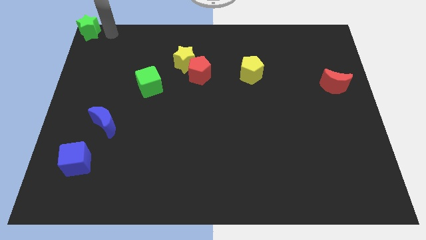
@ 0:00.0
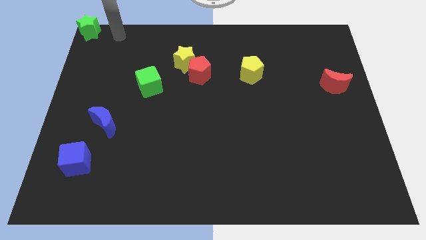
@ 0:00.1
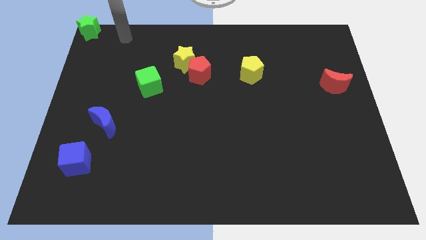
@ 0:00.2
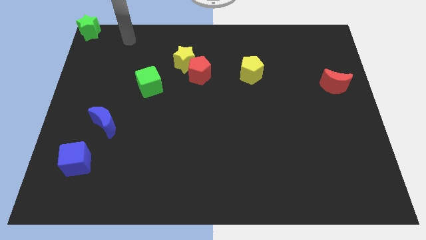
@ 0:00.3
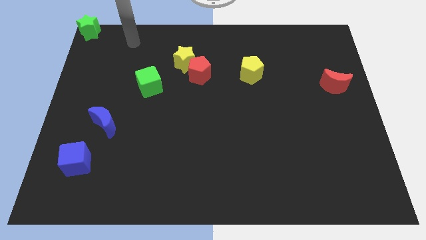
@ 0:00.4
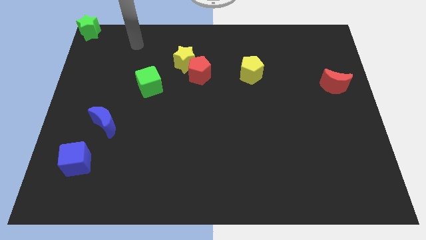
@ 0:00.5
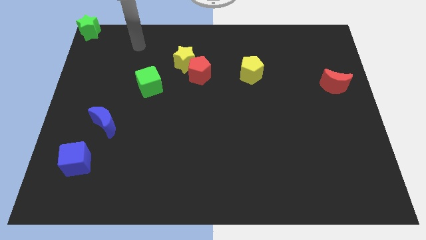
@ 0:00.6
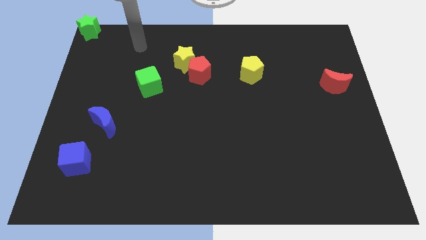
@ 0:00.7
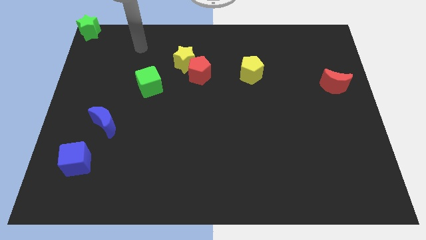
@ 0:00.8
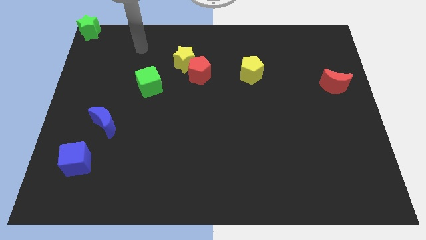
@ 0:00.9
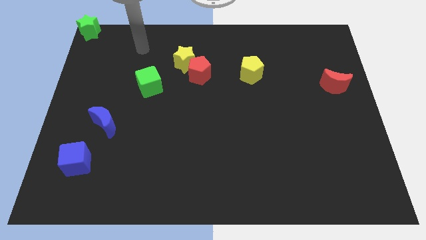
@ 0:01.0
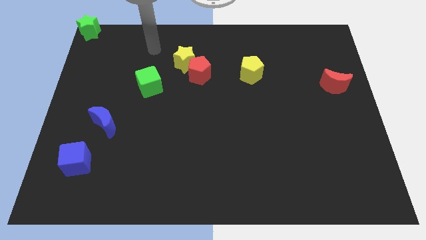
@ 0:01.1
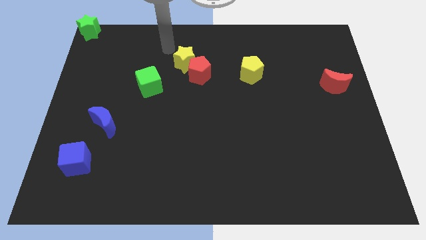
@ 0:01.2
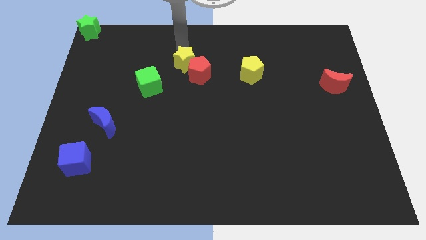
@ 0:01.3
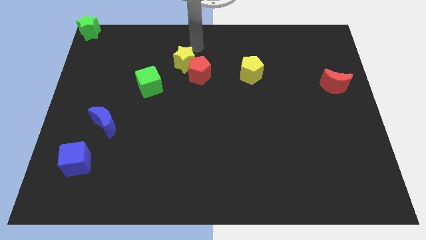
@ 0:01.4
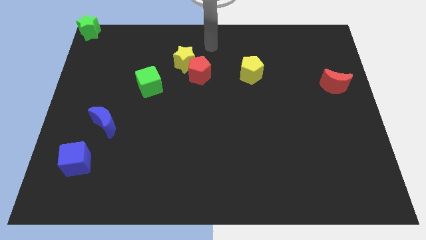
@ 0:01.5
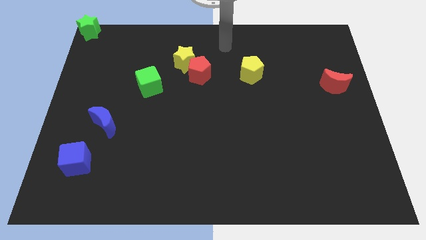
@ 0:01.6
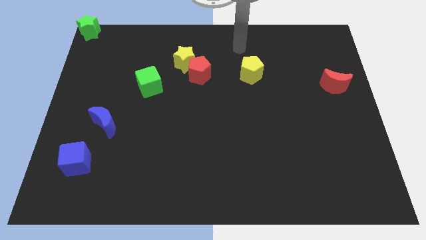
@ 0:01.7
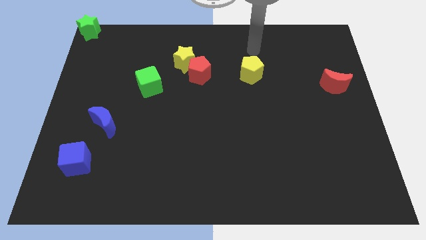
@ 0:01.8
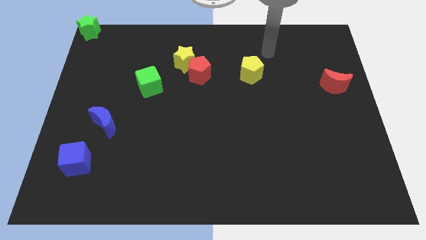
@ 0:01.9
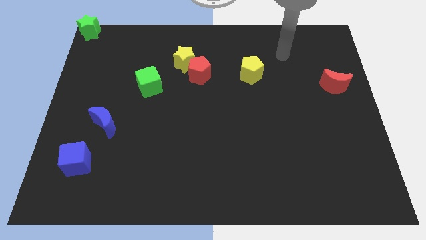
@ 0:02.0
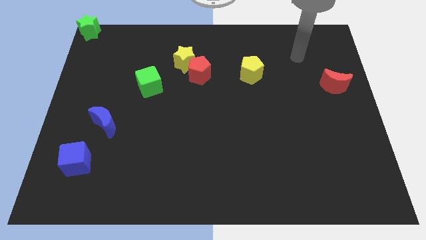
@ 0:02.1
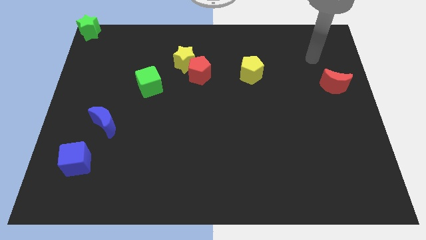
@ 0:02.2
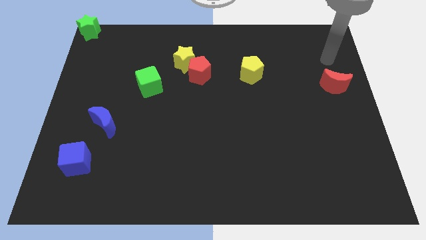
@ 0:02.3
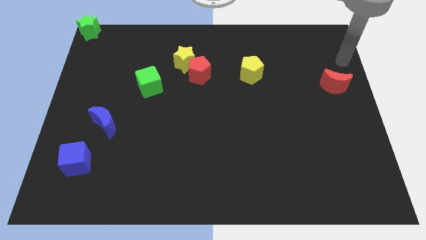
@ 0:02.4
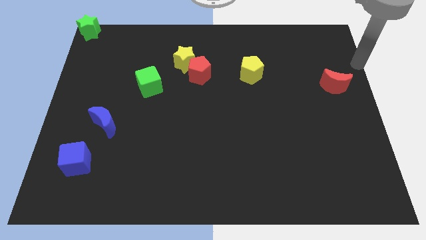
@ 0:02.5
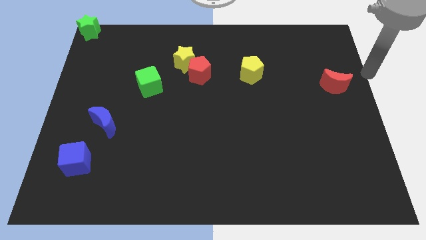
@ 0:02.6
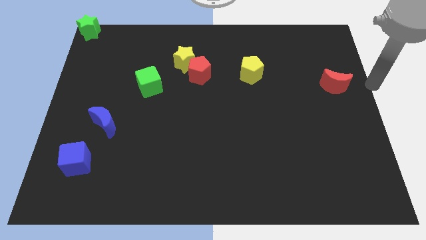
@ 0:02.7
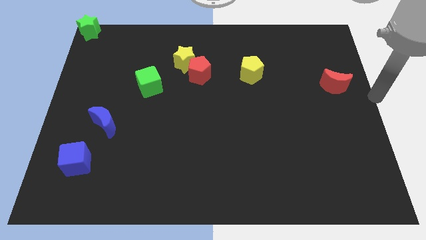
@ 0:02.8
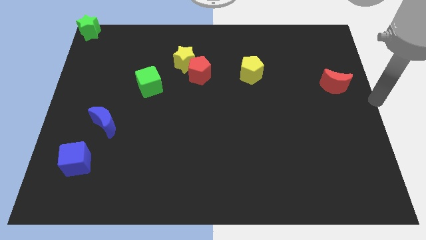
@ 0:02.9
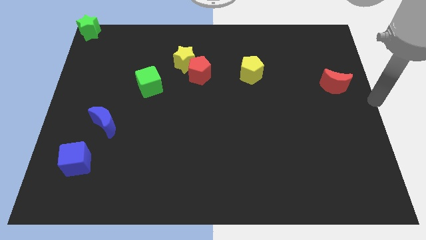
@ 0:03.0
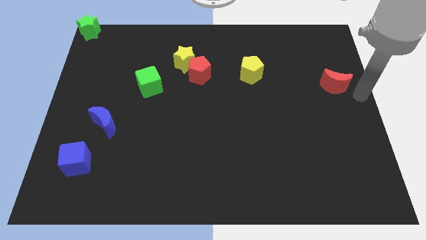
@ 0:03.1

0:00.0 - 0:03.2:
move your arm away from the green star

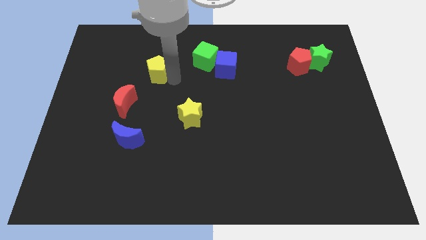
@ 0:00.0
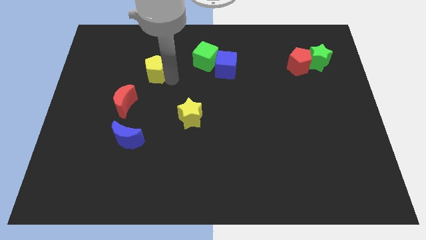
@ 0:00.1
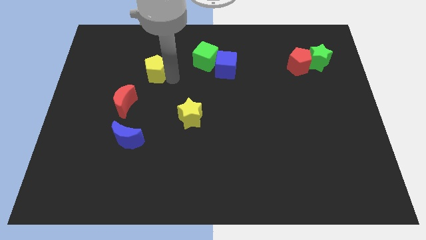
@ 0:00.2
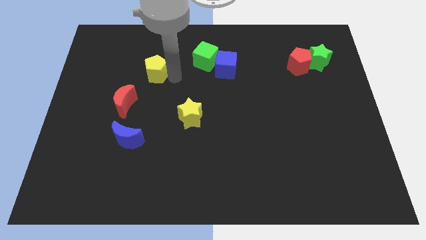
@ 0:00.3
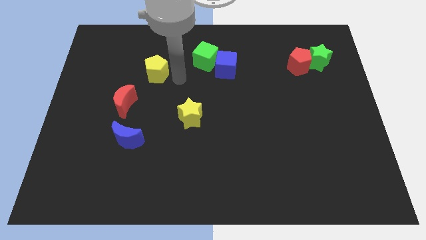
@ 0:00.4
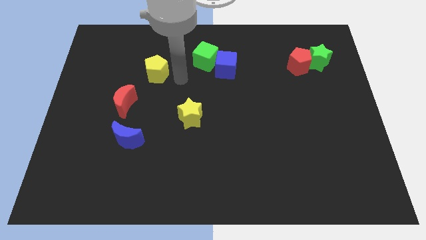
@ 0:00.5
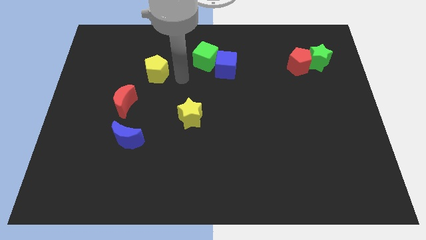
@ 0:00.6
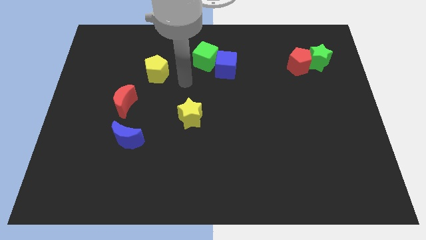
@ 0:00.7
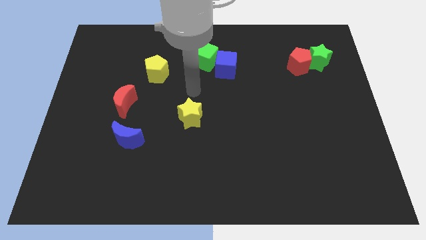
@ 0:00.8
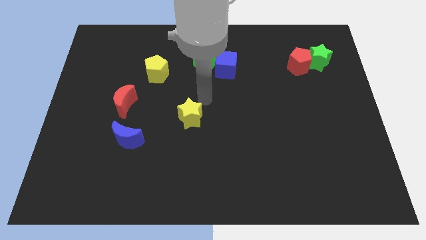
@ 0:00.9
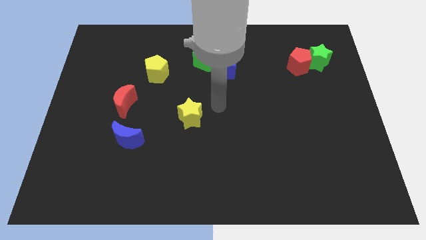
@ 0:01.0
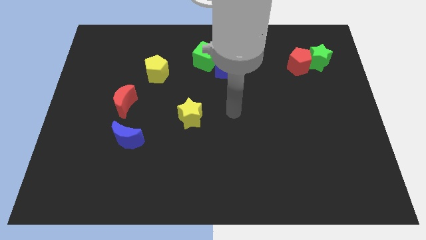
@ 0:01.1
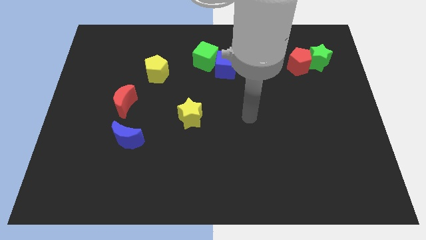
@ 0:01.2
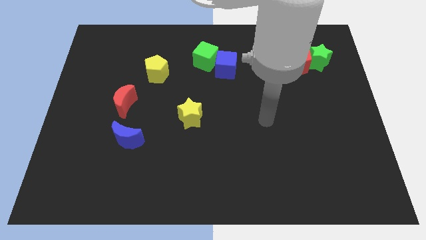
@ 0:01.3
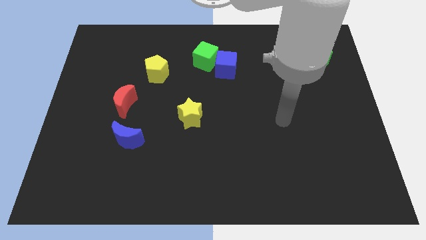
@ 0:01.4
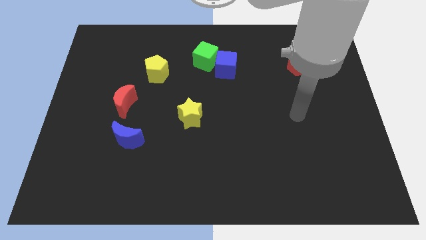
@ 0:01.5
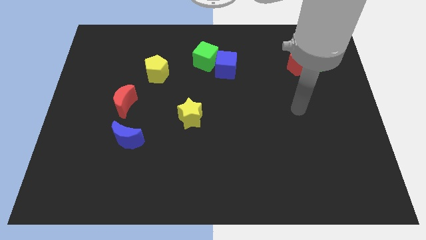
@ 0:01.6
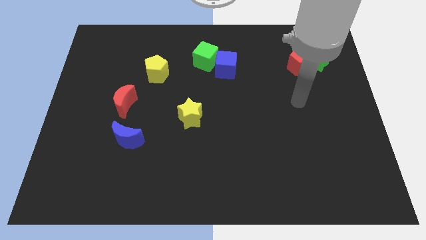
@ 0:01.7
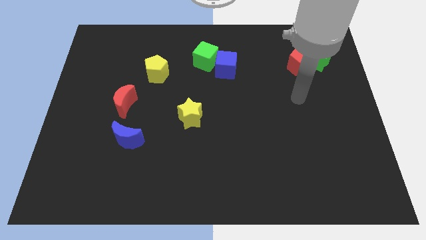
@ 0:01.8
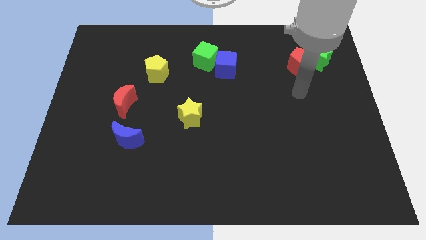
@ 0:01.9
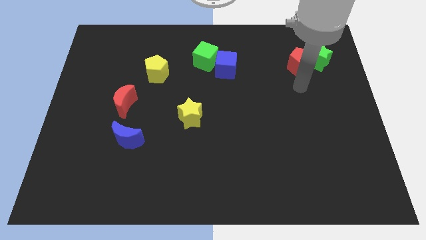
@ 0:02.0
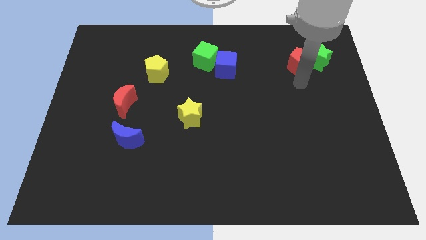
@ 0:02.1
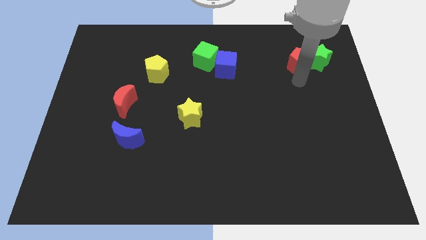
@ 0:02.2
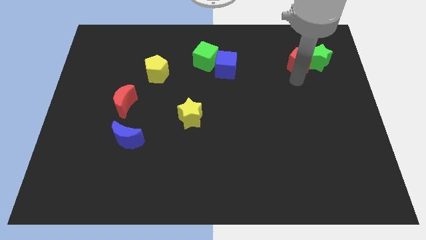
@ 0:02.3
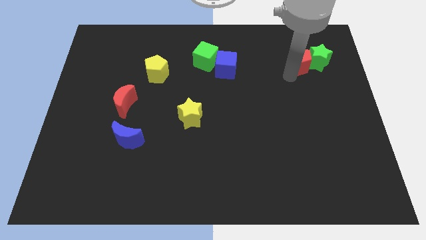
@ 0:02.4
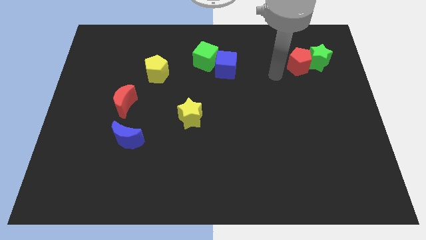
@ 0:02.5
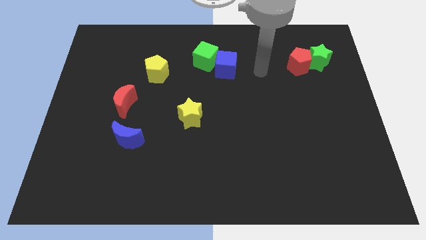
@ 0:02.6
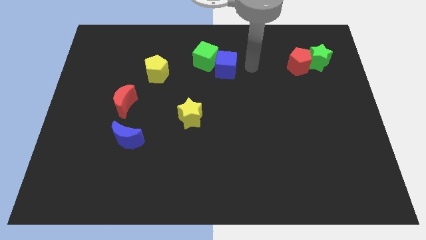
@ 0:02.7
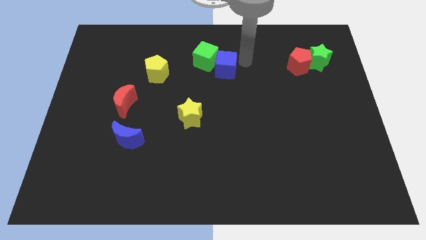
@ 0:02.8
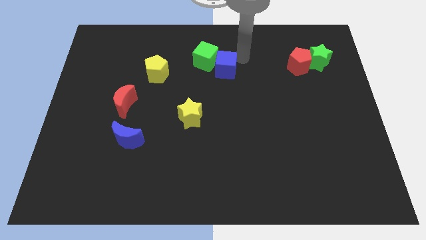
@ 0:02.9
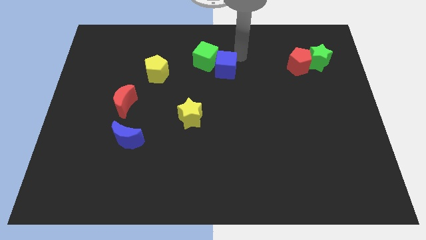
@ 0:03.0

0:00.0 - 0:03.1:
place your arm to the top side of the blue cube

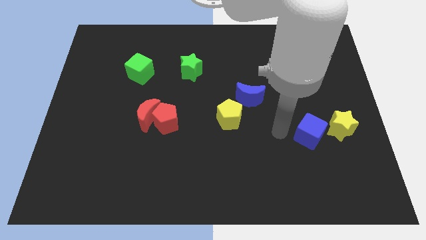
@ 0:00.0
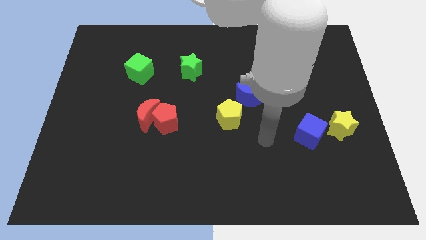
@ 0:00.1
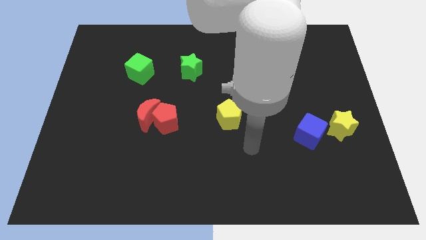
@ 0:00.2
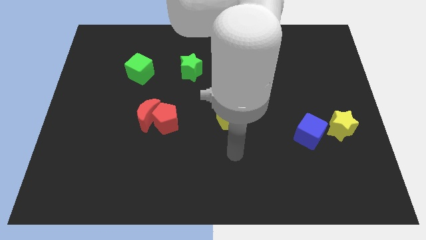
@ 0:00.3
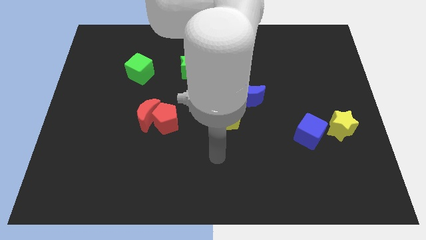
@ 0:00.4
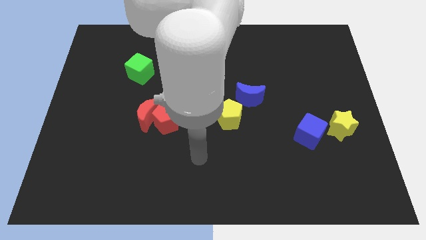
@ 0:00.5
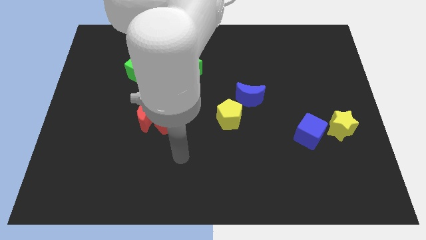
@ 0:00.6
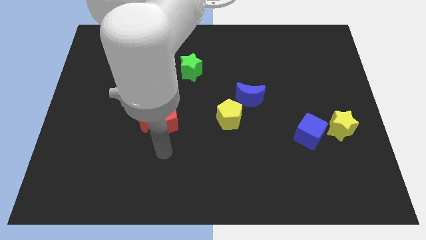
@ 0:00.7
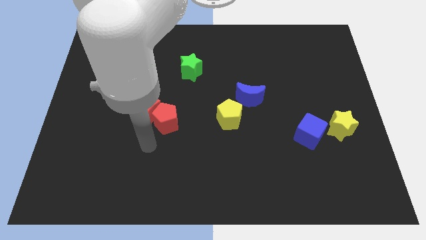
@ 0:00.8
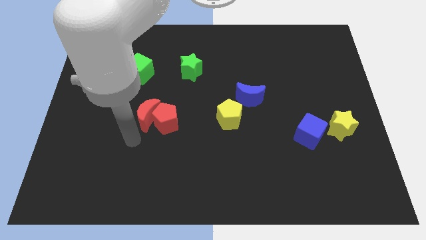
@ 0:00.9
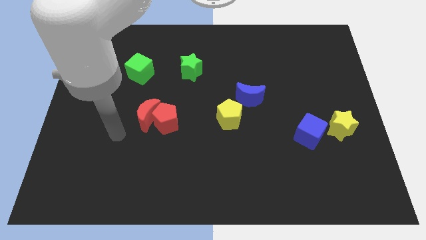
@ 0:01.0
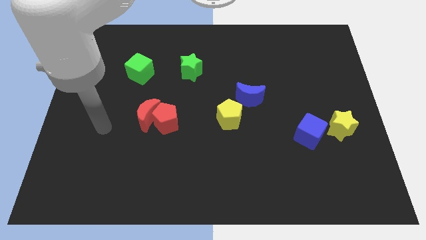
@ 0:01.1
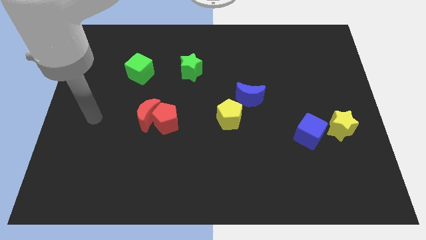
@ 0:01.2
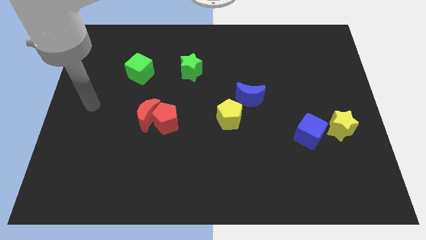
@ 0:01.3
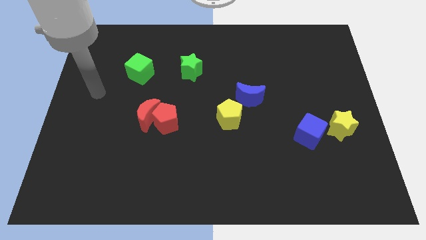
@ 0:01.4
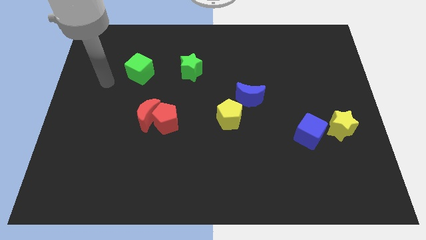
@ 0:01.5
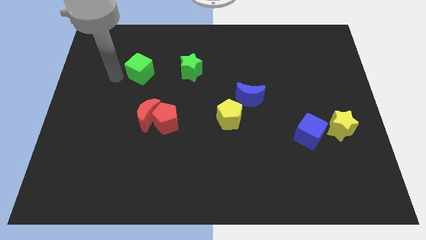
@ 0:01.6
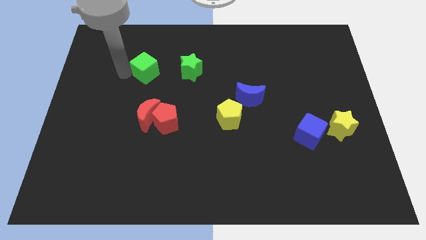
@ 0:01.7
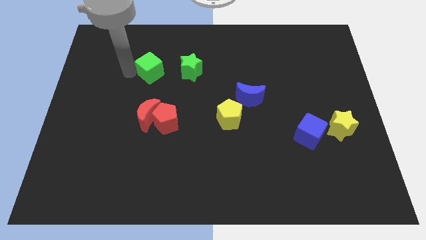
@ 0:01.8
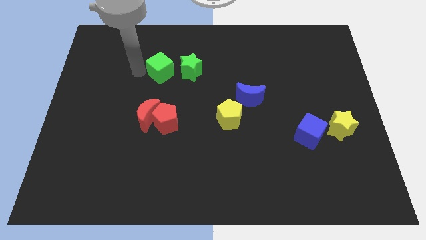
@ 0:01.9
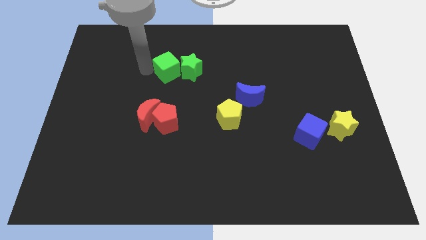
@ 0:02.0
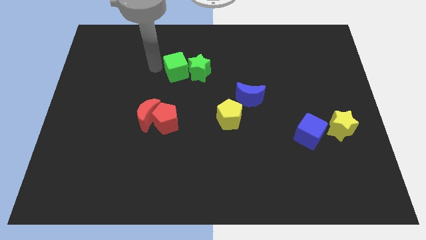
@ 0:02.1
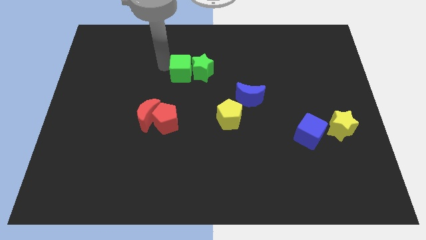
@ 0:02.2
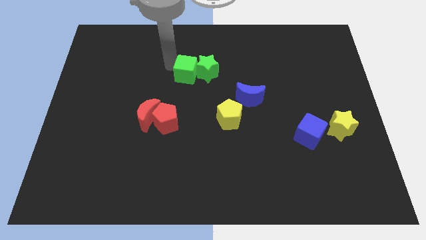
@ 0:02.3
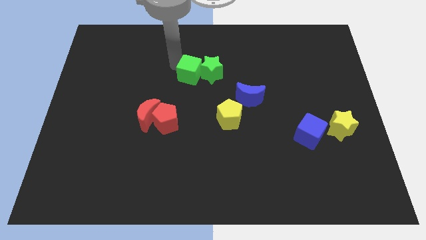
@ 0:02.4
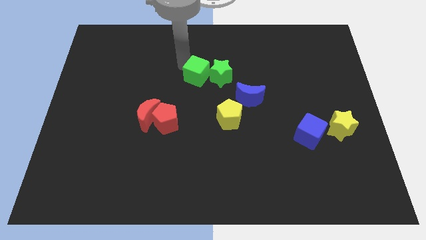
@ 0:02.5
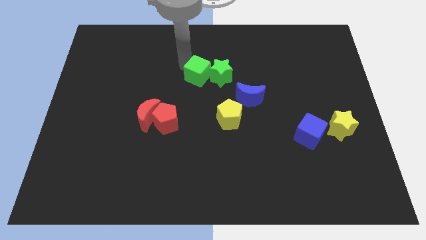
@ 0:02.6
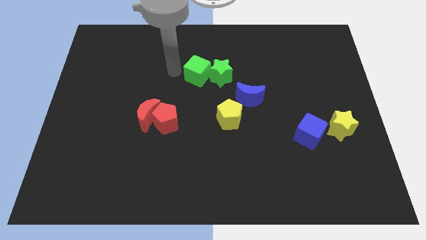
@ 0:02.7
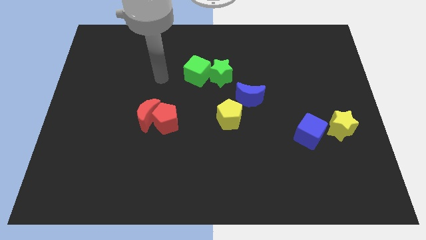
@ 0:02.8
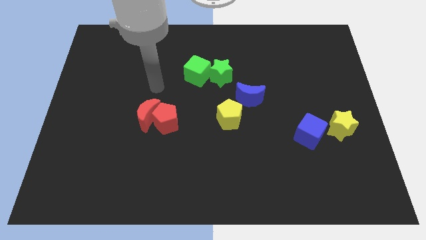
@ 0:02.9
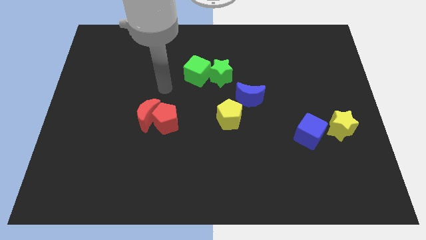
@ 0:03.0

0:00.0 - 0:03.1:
slide green cube into green star
